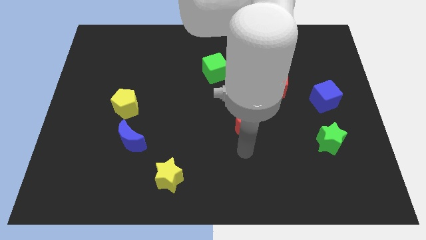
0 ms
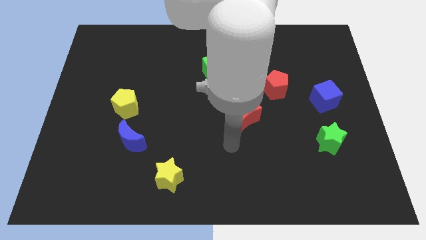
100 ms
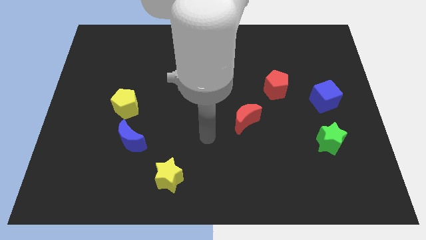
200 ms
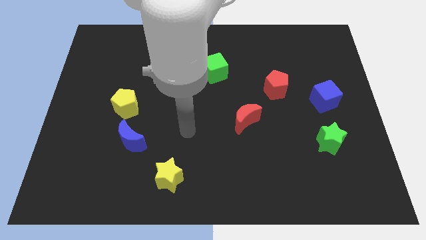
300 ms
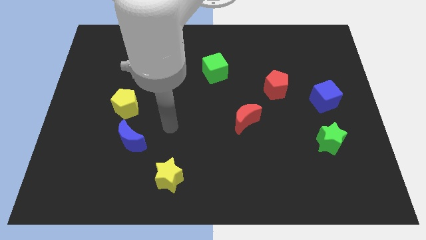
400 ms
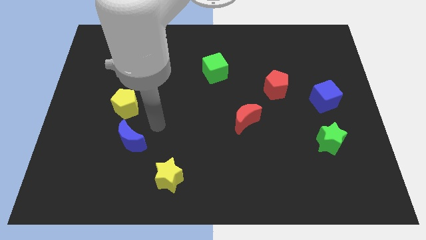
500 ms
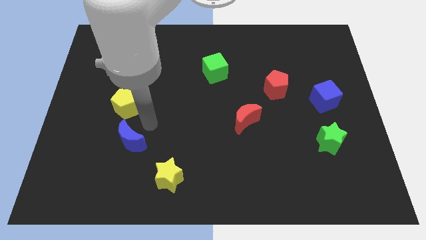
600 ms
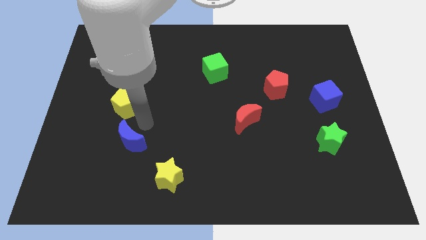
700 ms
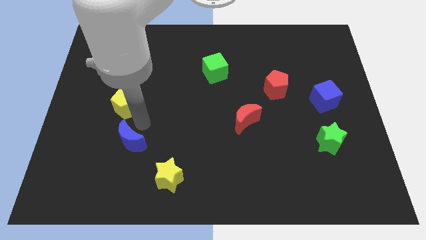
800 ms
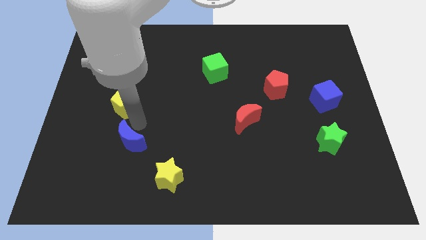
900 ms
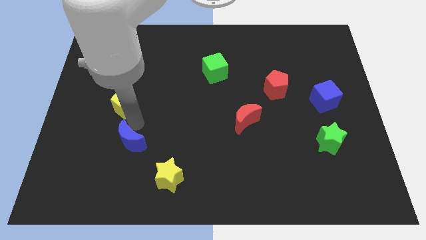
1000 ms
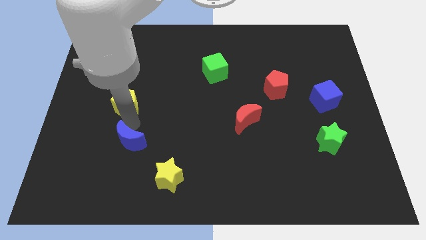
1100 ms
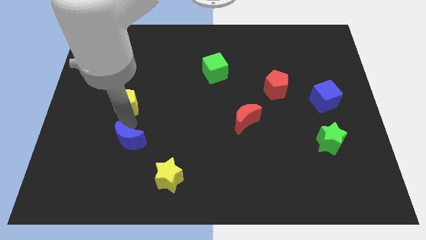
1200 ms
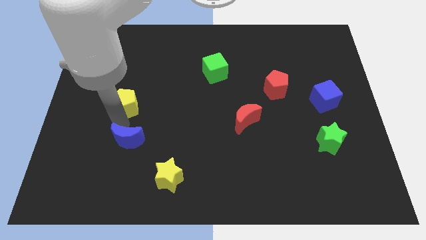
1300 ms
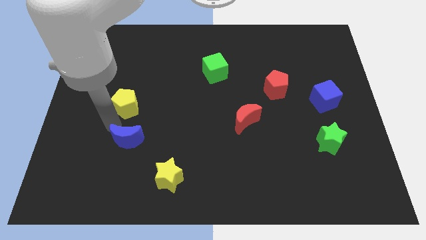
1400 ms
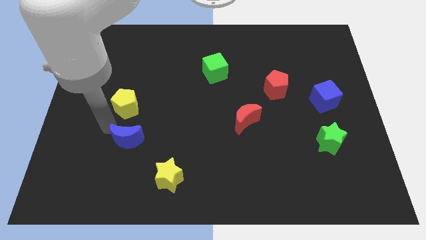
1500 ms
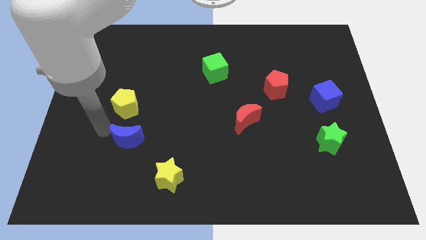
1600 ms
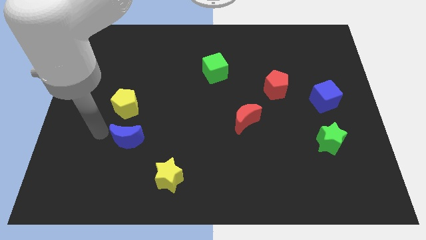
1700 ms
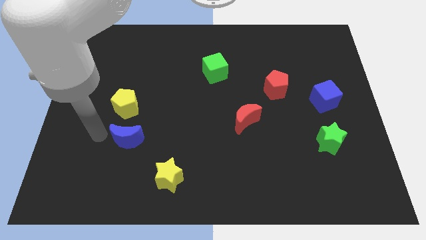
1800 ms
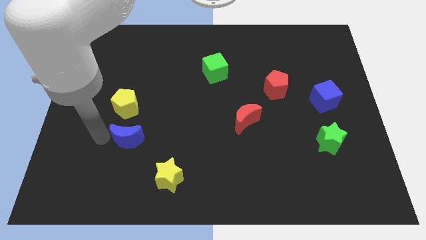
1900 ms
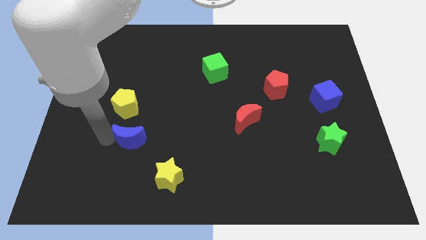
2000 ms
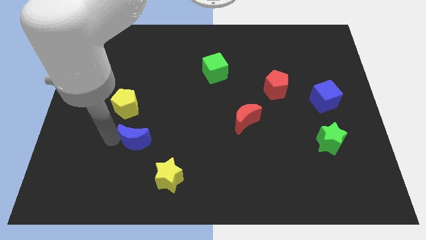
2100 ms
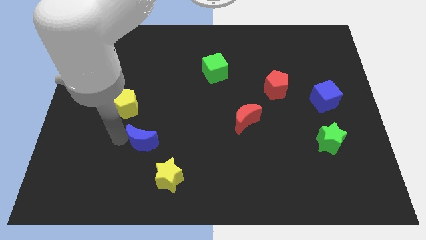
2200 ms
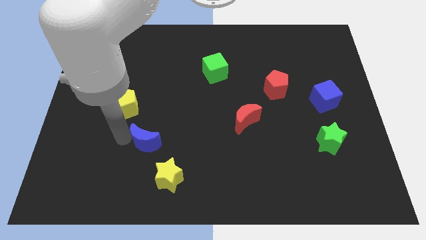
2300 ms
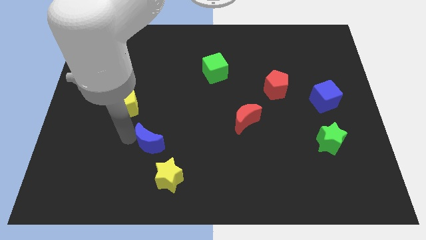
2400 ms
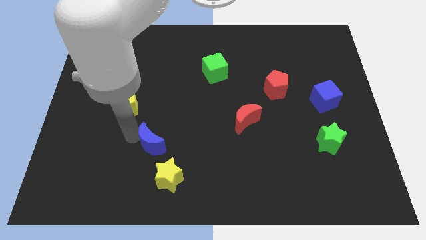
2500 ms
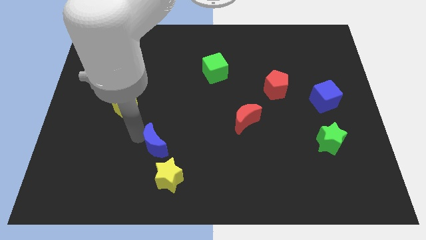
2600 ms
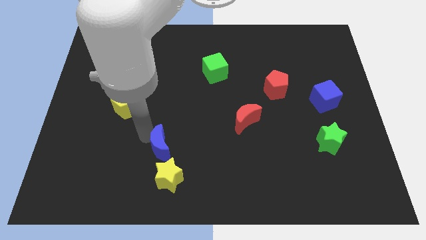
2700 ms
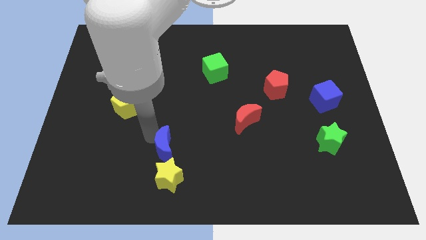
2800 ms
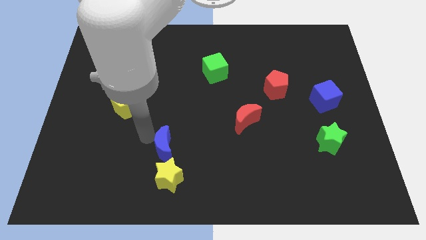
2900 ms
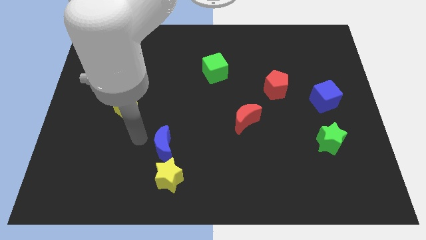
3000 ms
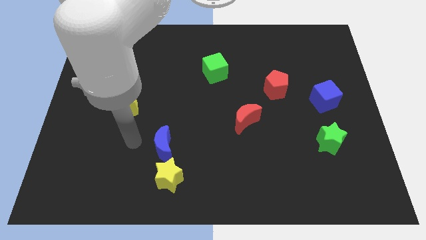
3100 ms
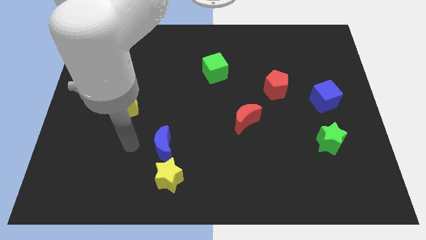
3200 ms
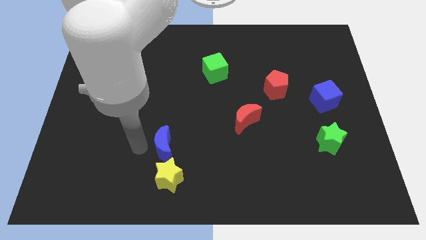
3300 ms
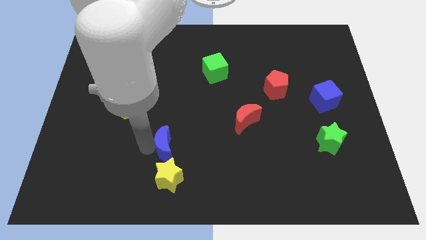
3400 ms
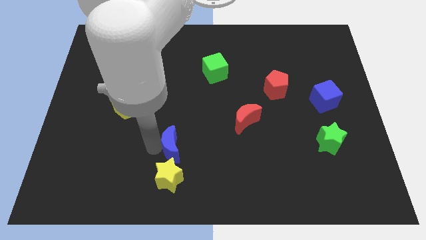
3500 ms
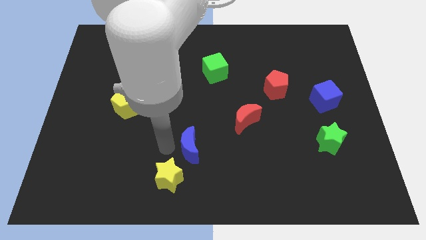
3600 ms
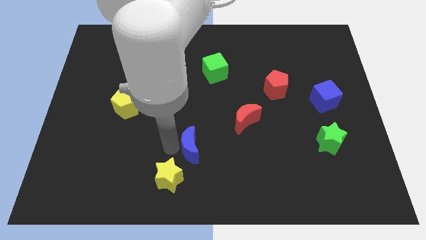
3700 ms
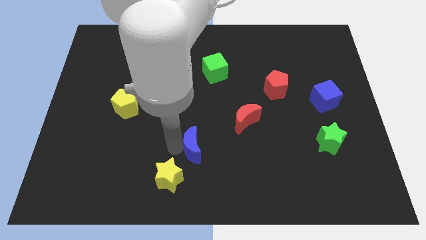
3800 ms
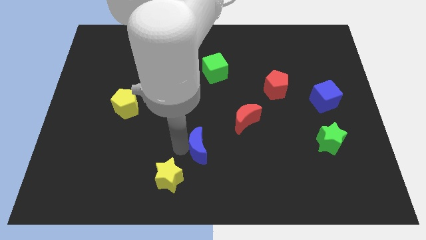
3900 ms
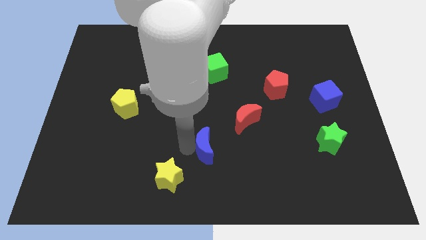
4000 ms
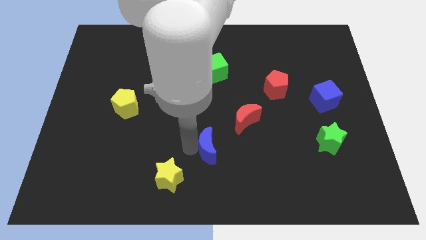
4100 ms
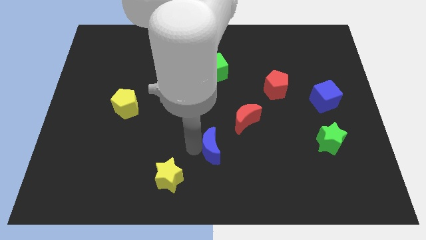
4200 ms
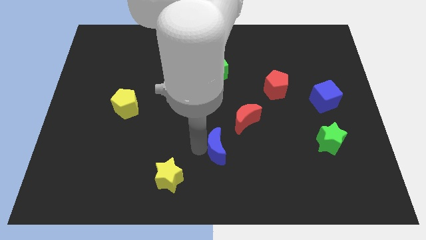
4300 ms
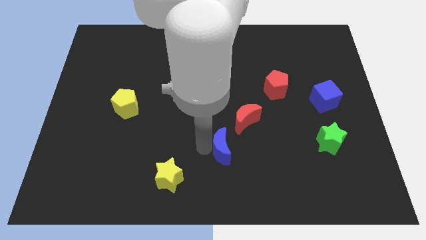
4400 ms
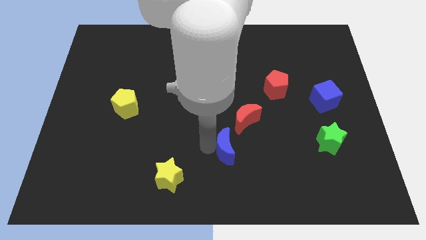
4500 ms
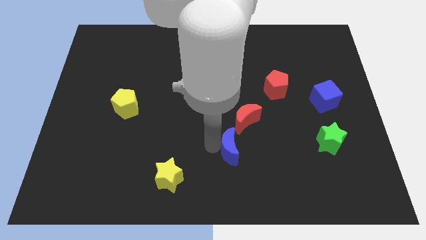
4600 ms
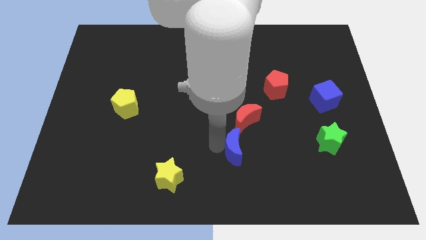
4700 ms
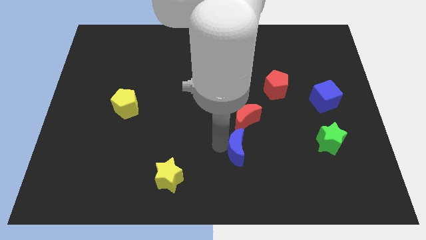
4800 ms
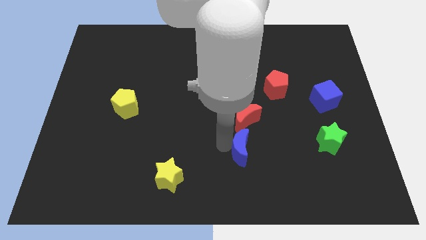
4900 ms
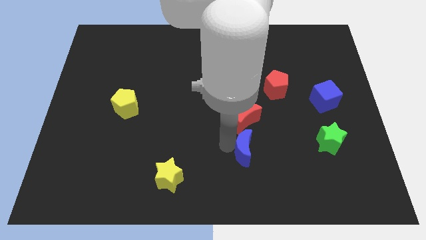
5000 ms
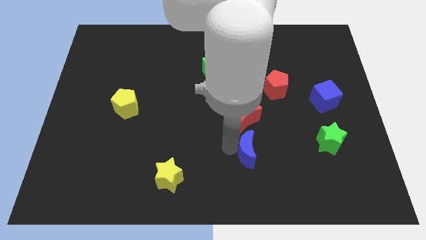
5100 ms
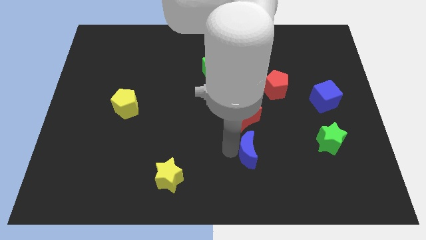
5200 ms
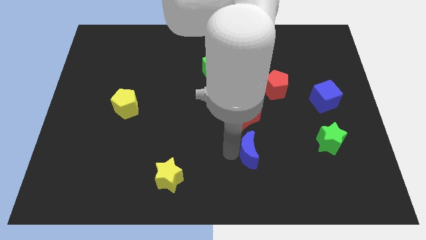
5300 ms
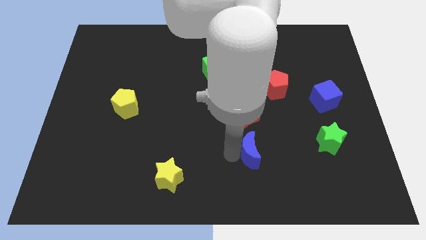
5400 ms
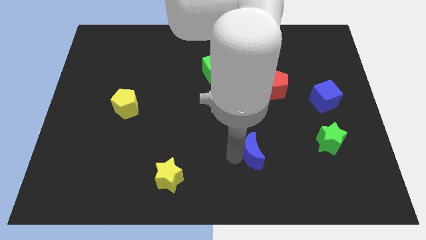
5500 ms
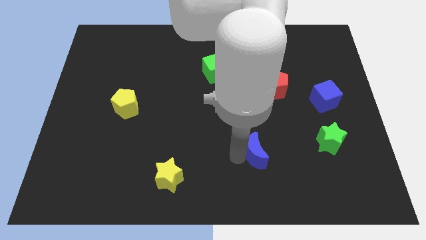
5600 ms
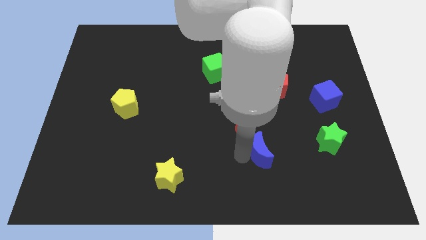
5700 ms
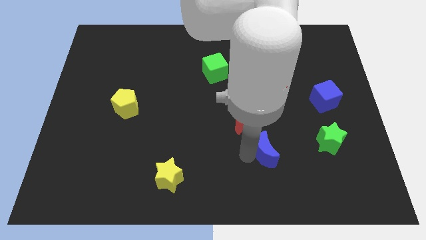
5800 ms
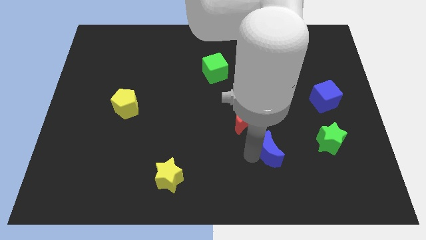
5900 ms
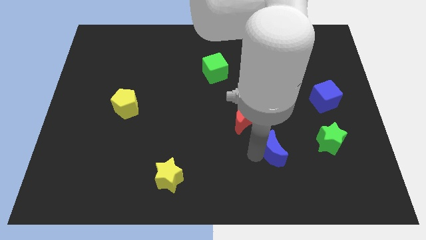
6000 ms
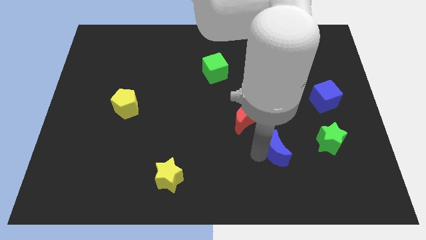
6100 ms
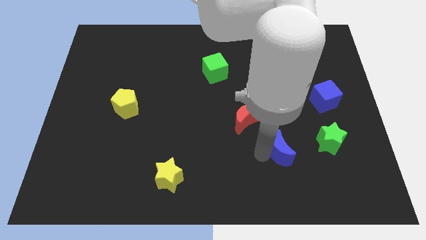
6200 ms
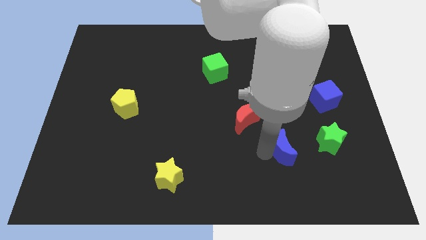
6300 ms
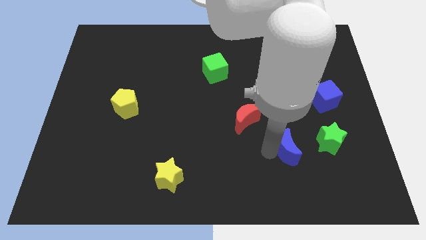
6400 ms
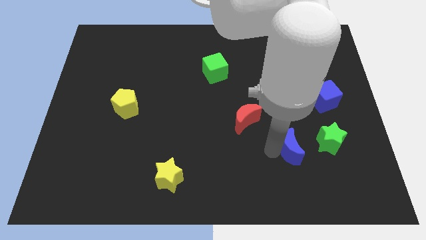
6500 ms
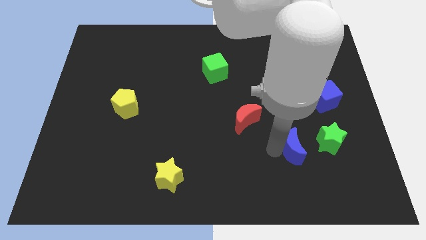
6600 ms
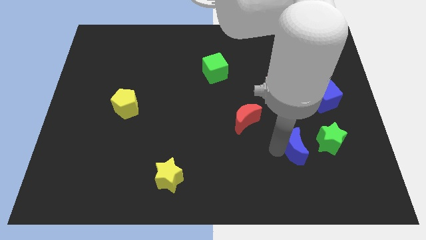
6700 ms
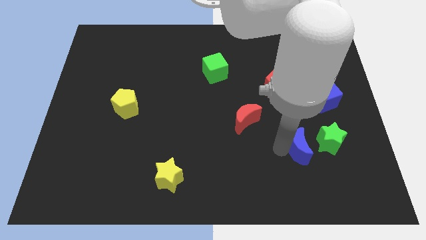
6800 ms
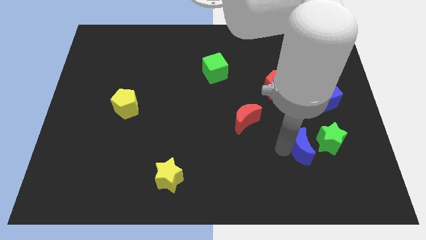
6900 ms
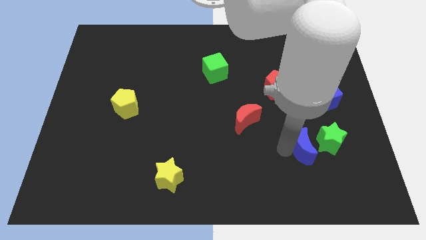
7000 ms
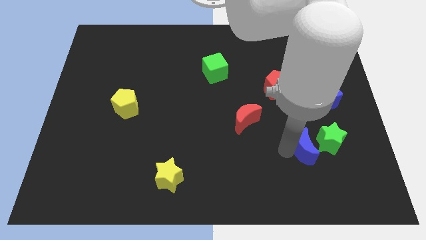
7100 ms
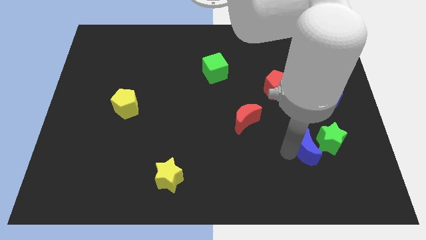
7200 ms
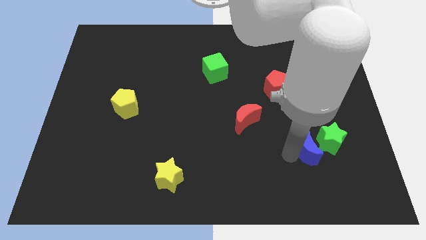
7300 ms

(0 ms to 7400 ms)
slide the blue moon to the green star

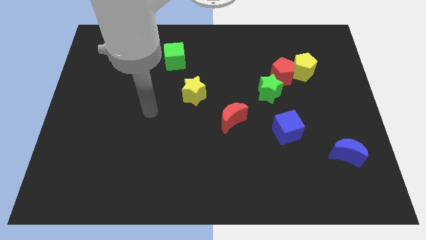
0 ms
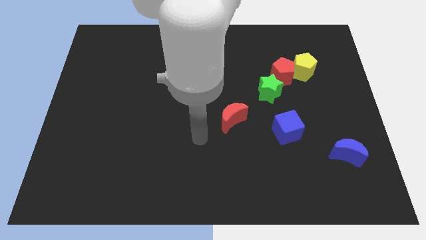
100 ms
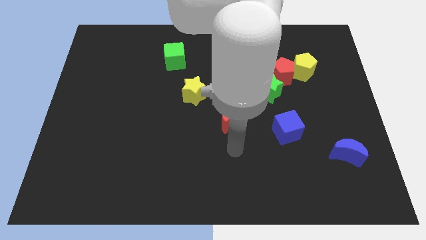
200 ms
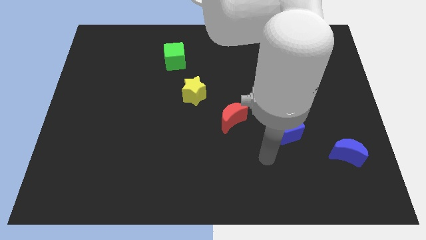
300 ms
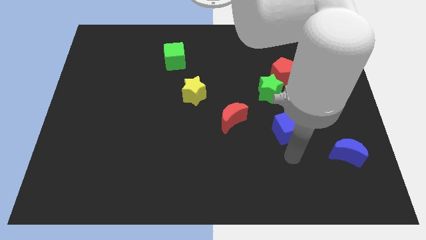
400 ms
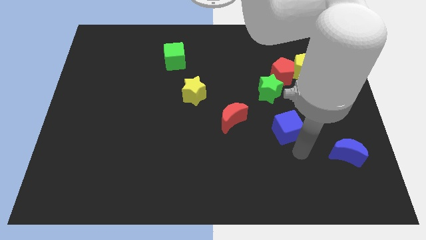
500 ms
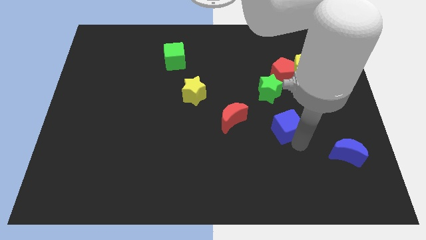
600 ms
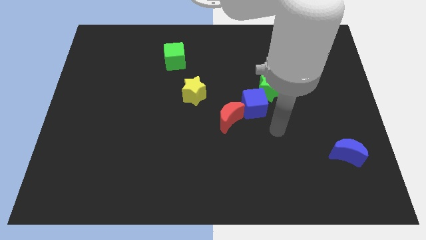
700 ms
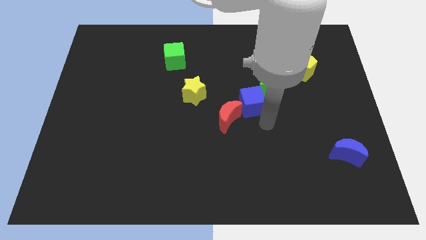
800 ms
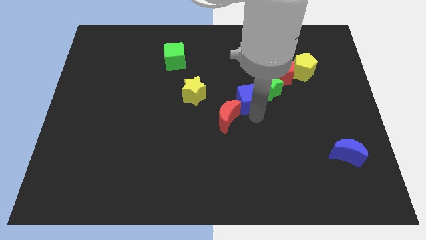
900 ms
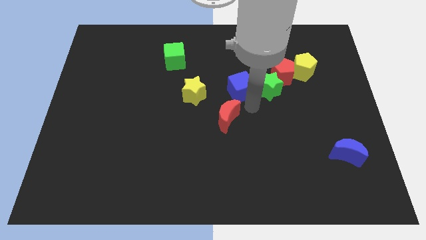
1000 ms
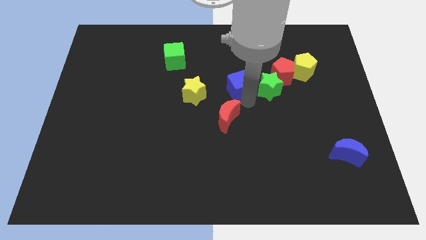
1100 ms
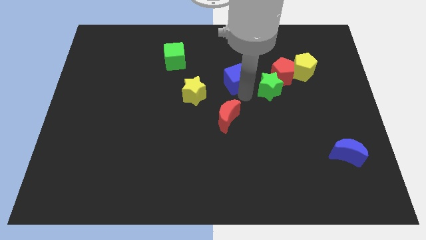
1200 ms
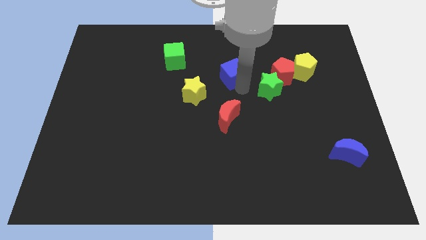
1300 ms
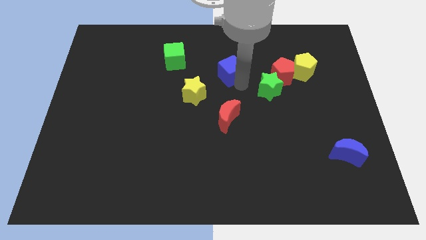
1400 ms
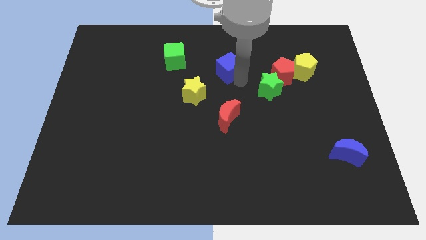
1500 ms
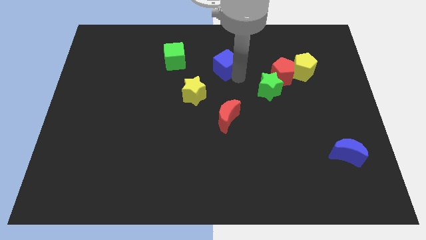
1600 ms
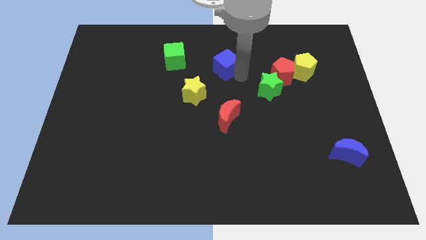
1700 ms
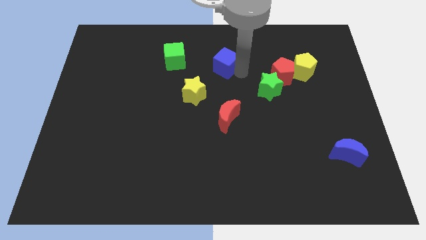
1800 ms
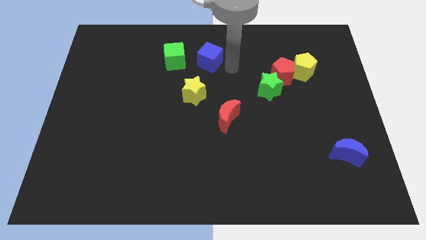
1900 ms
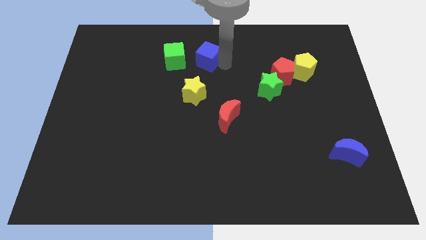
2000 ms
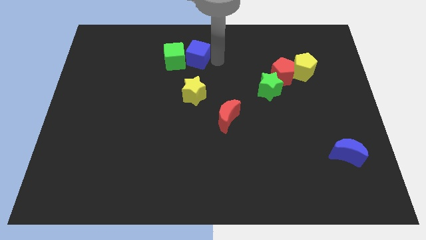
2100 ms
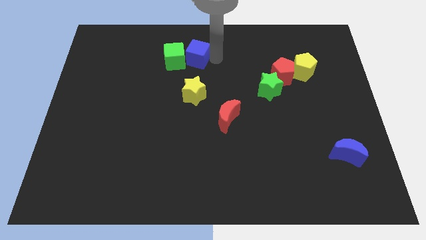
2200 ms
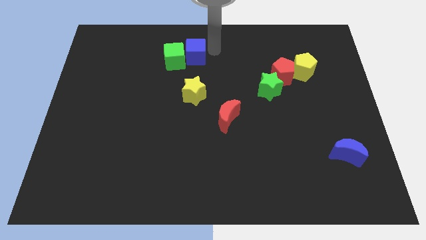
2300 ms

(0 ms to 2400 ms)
push the blue cube next to the green cube
